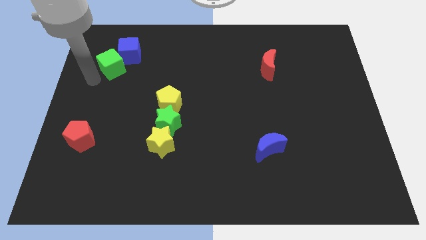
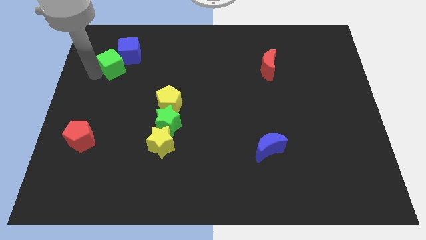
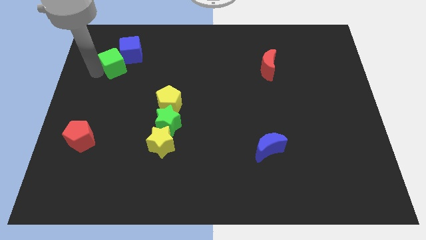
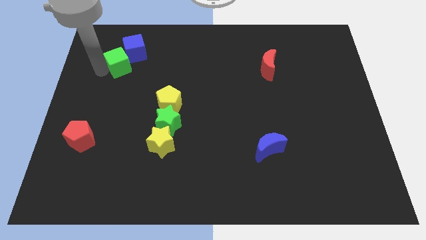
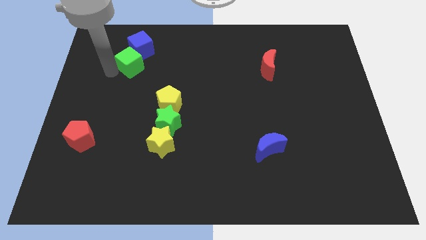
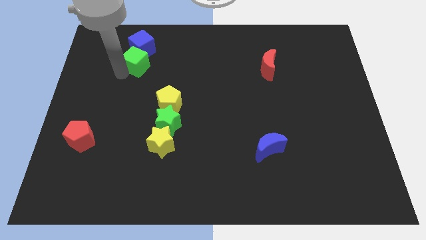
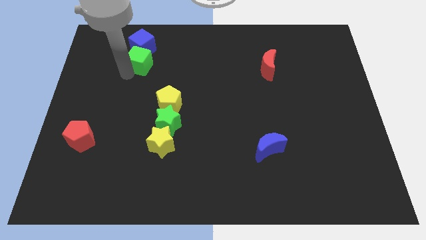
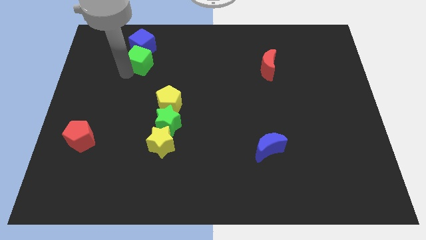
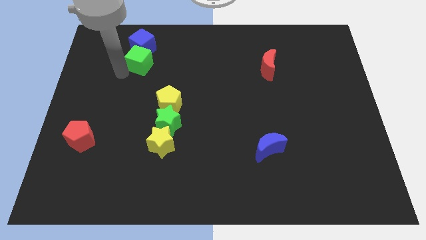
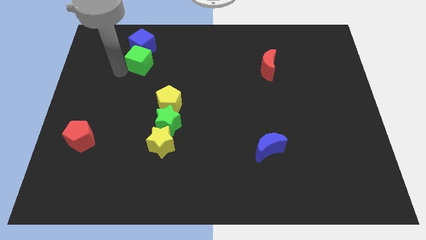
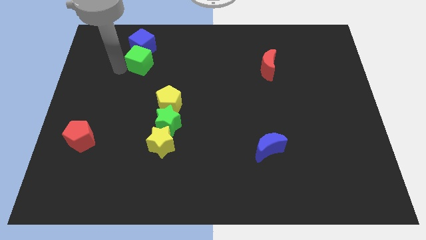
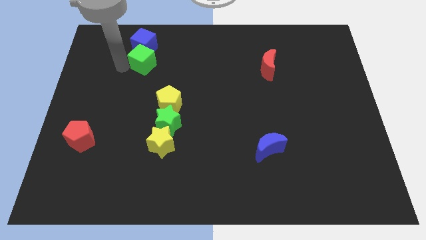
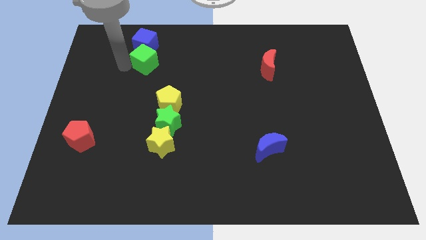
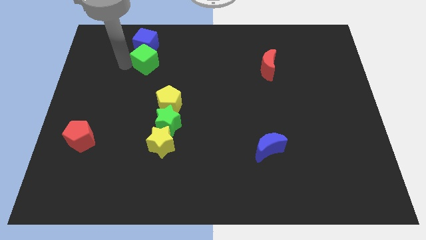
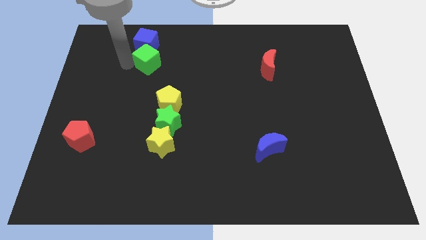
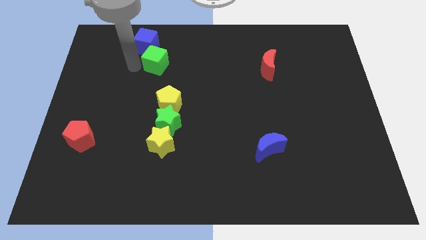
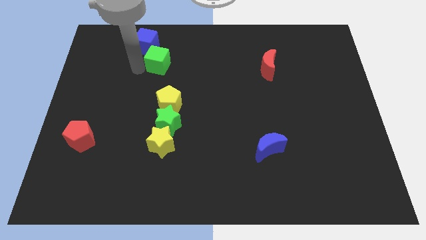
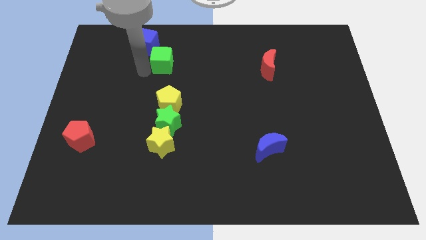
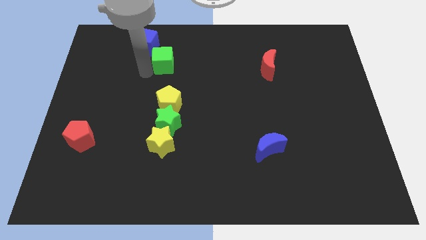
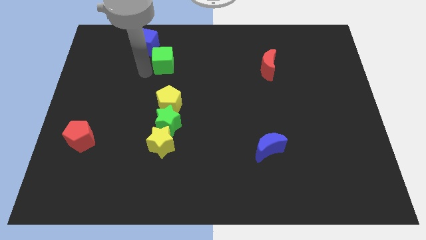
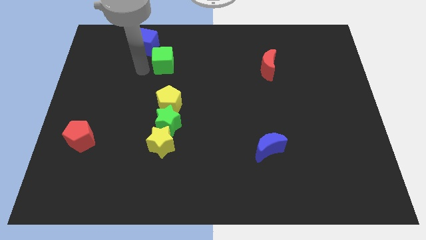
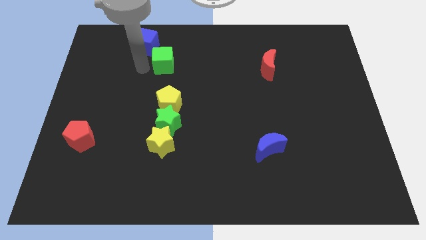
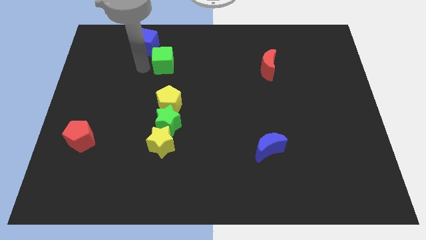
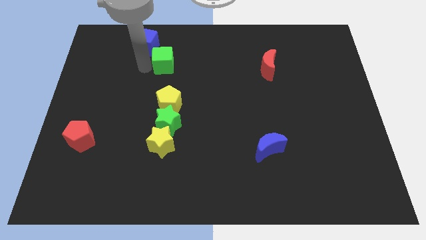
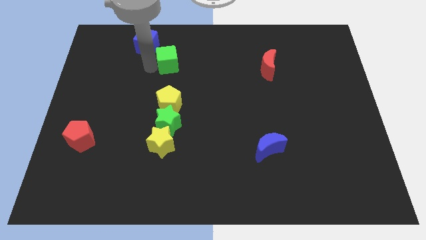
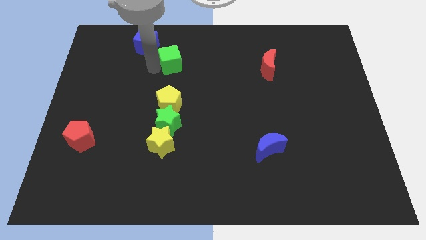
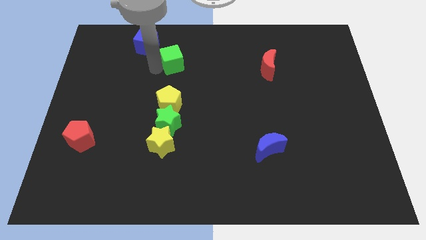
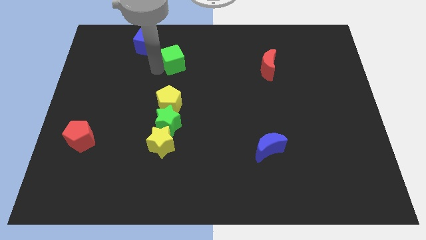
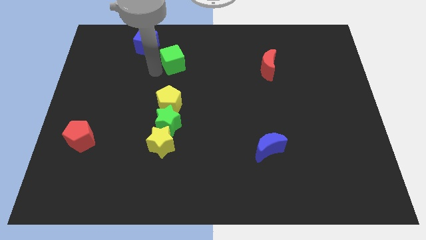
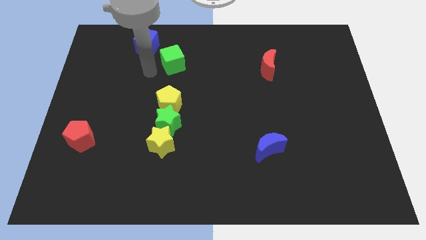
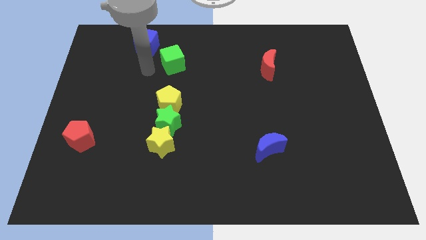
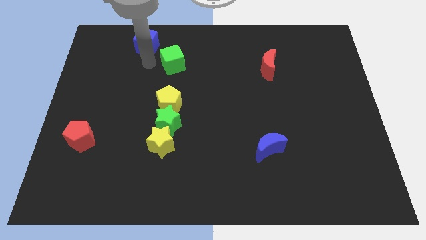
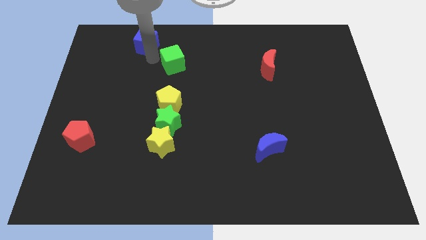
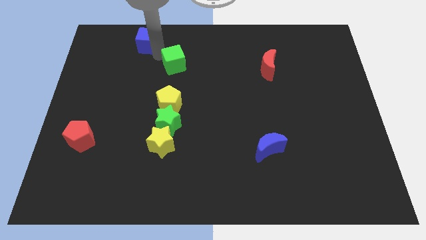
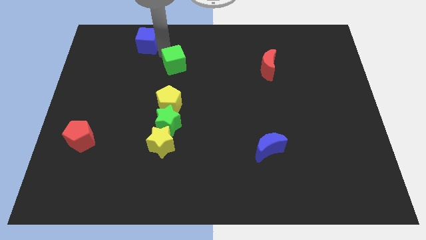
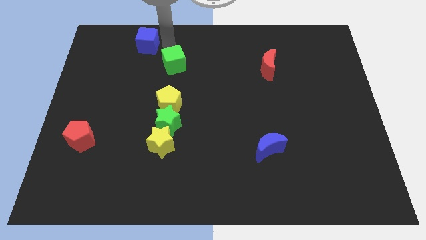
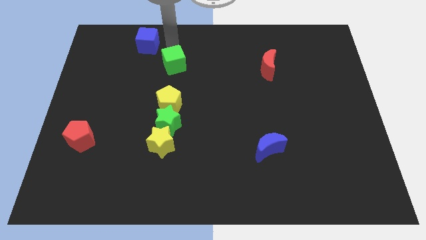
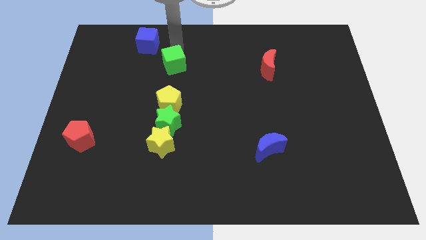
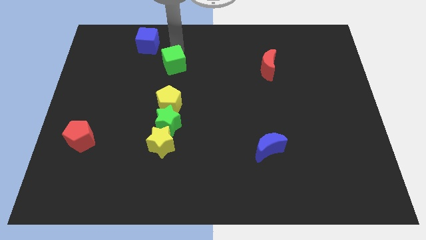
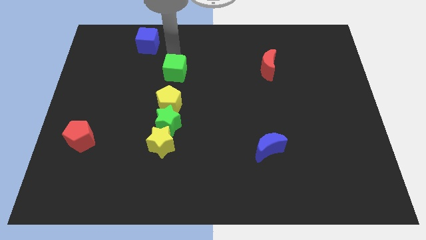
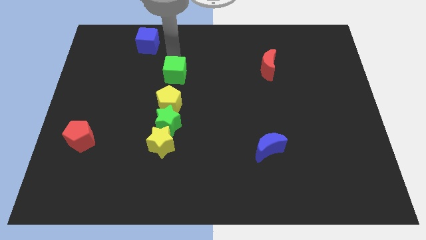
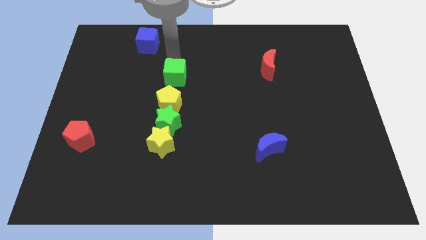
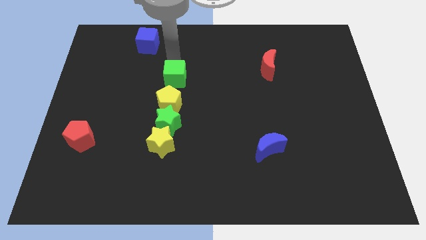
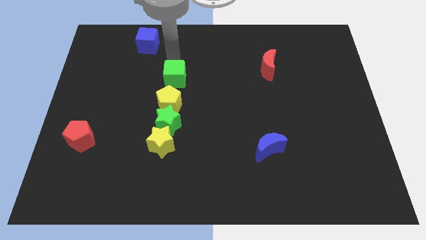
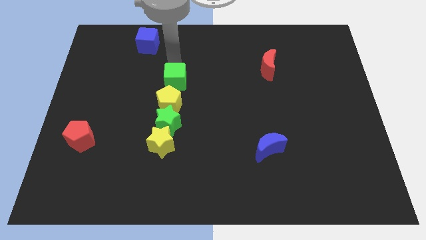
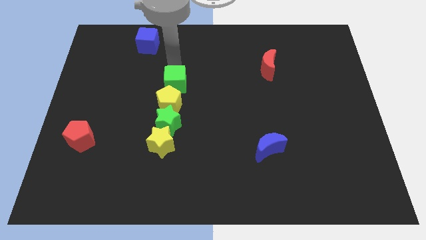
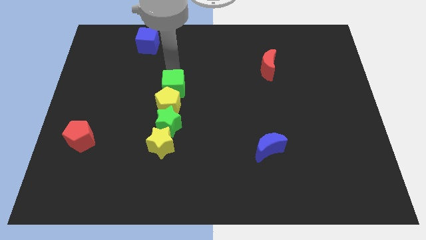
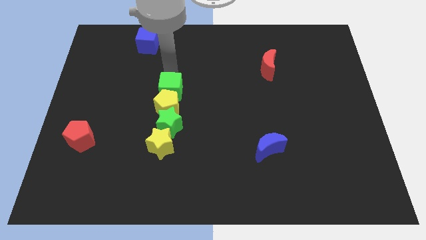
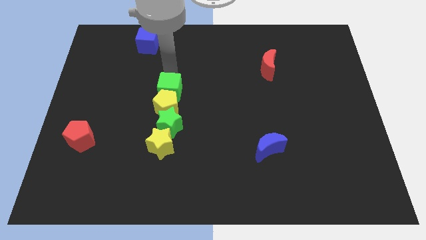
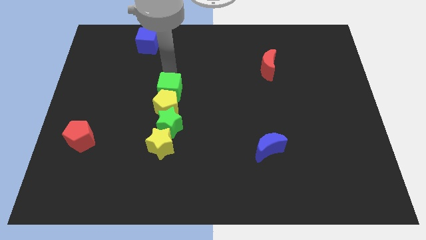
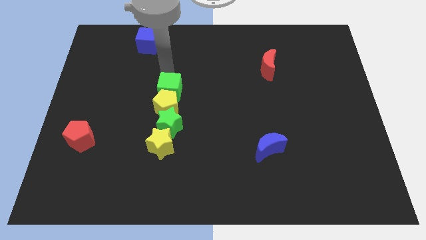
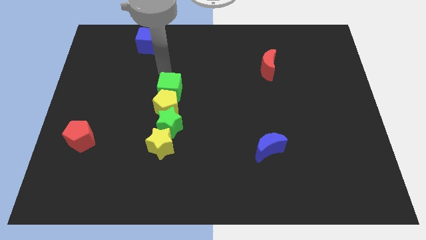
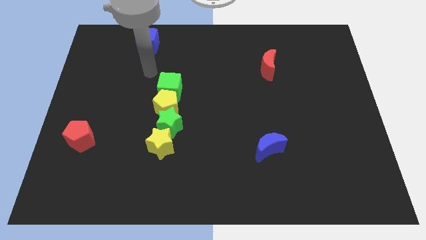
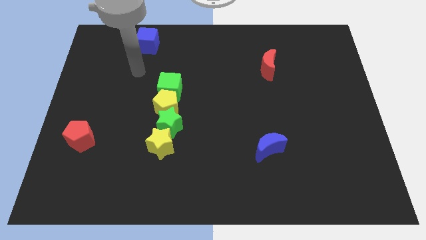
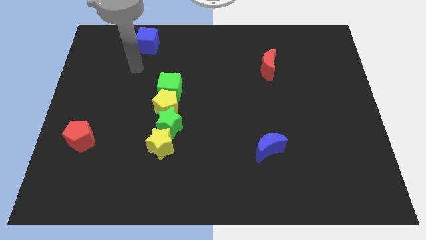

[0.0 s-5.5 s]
push the green cube to the top of the yellow pentagon

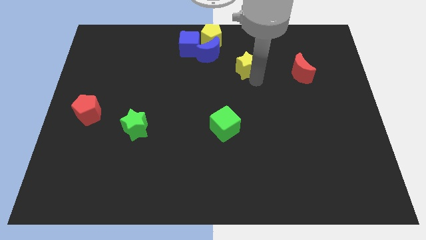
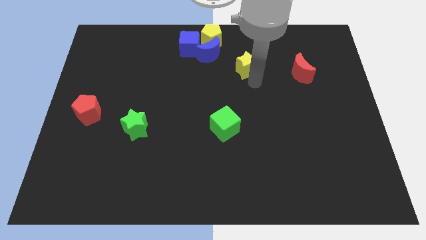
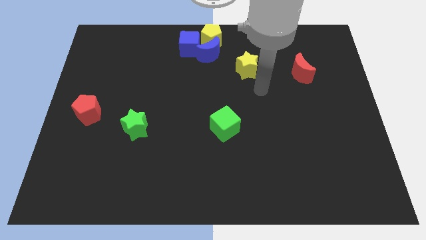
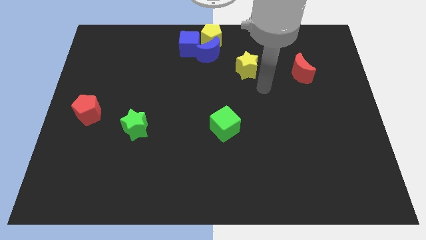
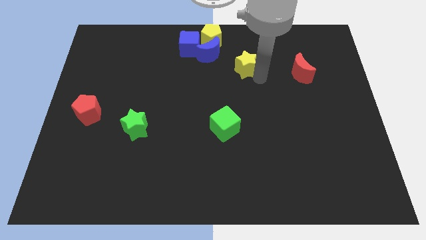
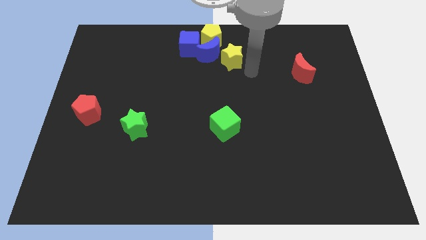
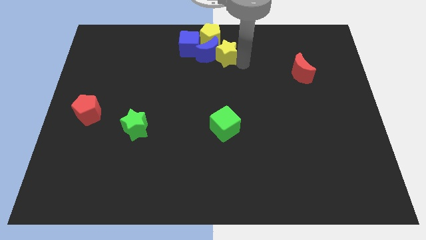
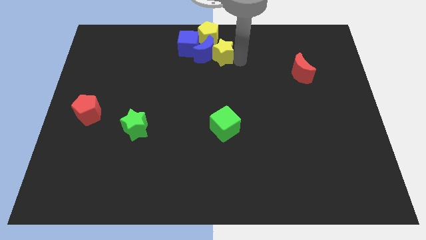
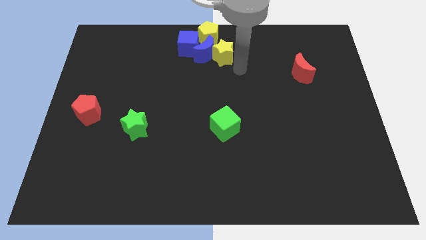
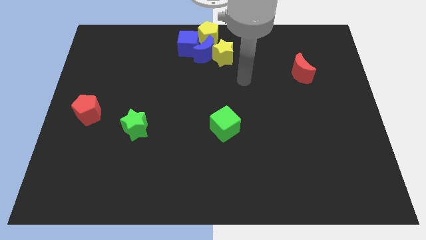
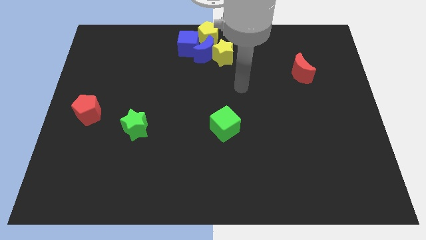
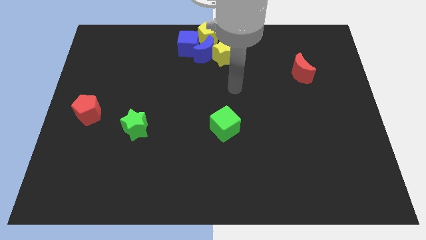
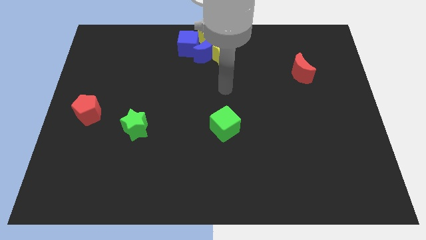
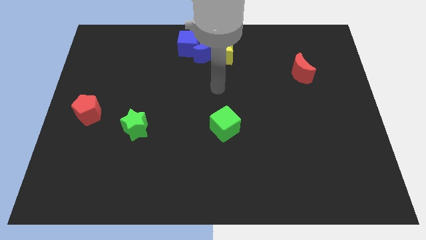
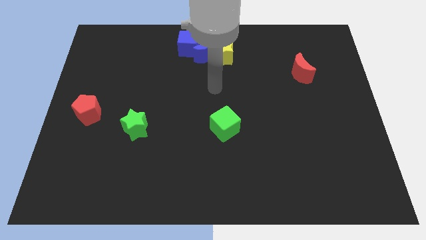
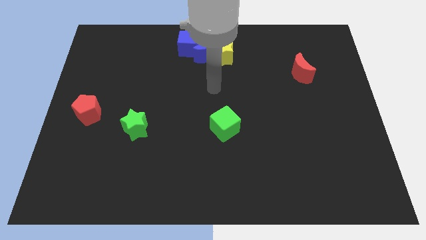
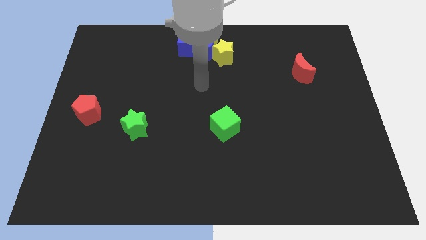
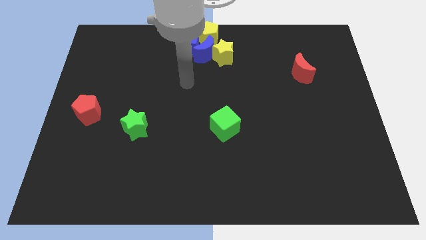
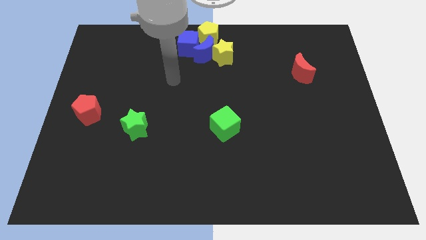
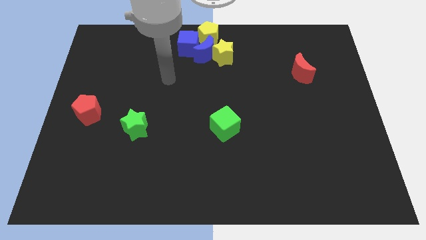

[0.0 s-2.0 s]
push the yellow star close to the blue moon

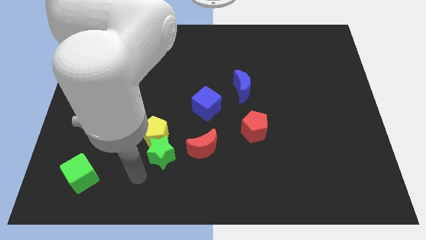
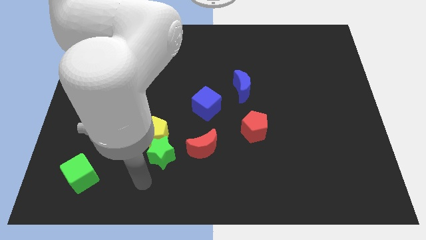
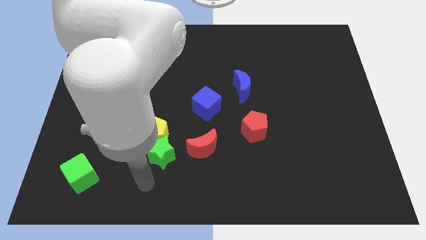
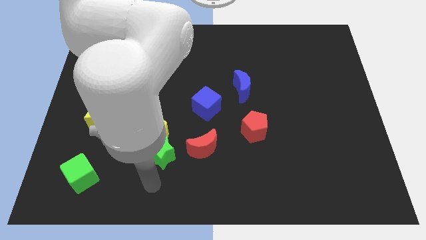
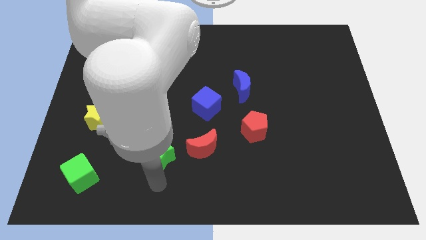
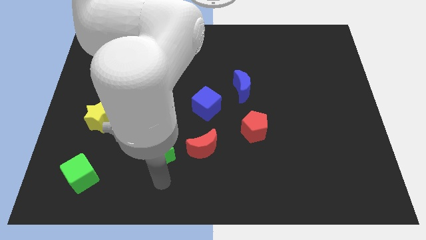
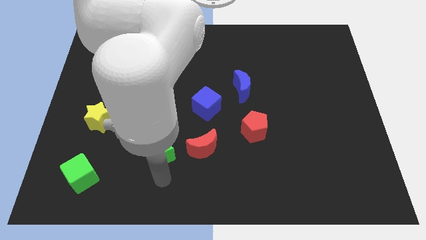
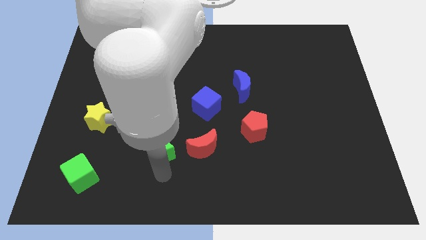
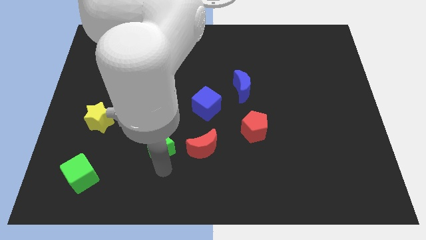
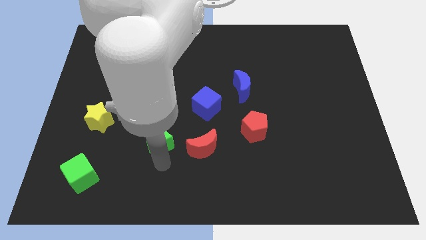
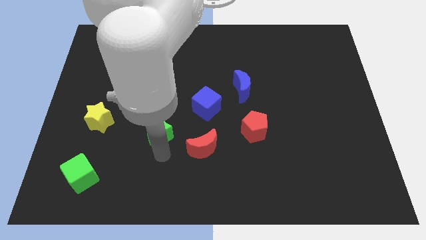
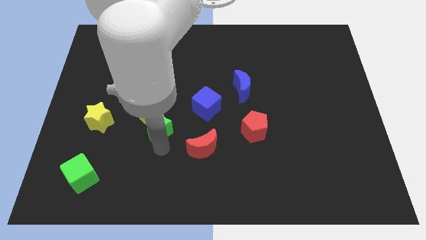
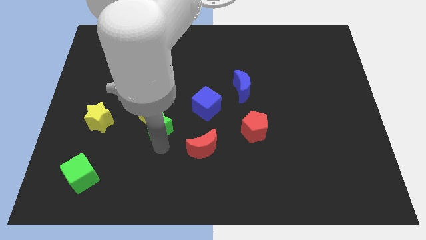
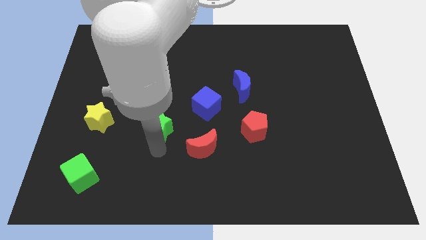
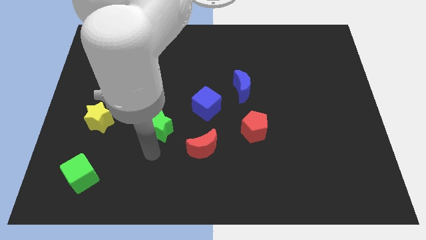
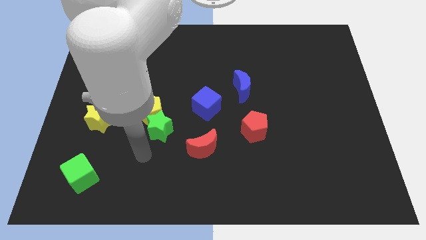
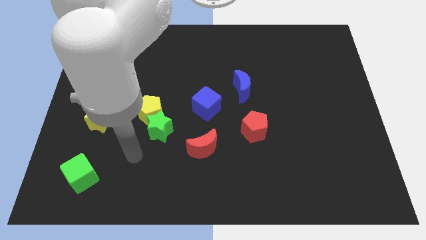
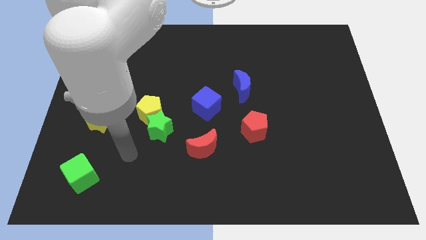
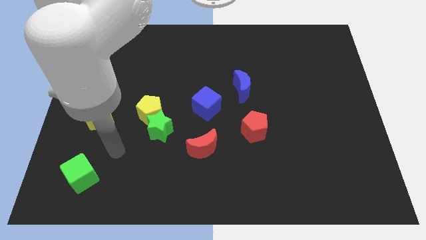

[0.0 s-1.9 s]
push the green star into the yellow pentagon
